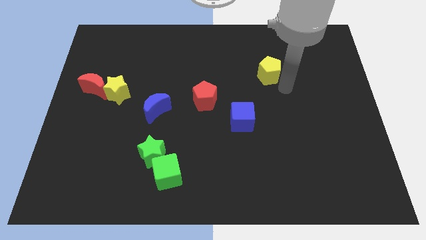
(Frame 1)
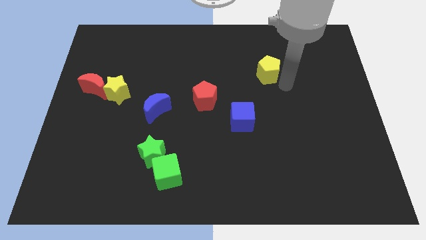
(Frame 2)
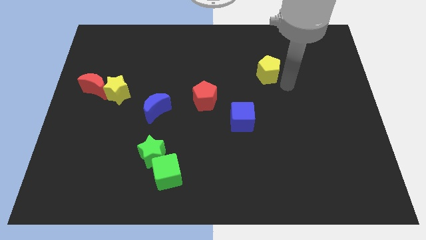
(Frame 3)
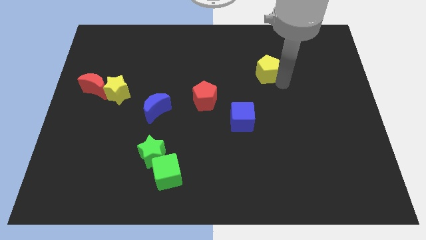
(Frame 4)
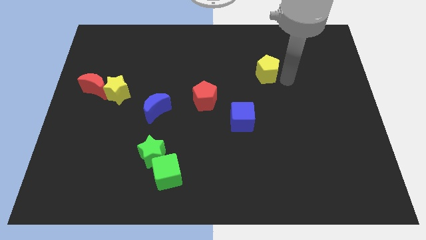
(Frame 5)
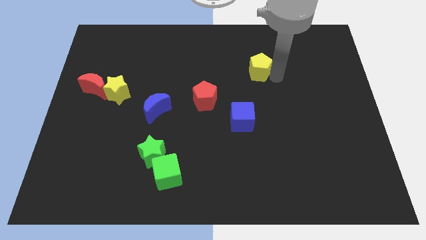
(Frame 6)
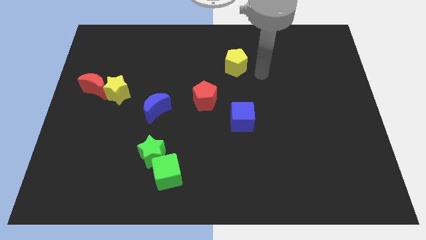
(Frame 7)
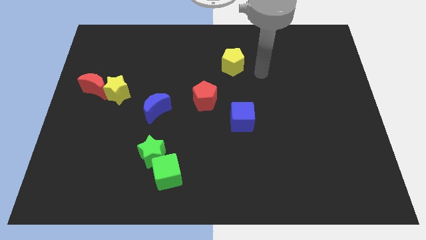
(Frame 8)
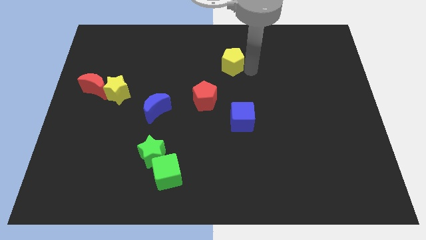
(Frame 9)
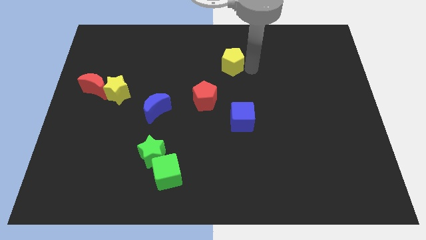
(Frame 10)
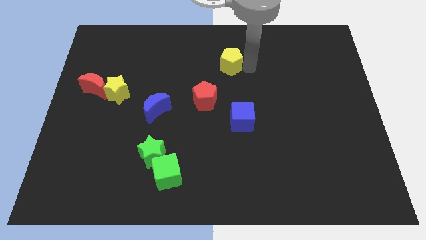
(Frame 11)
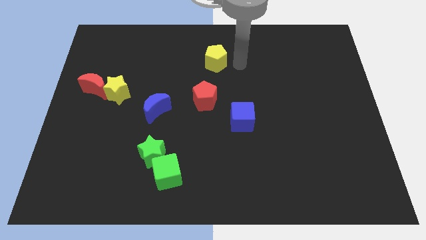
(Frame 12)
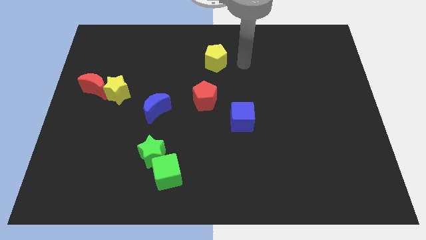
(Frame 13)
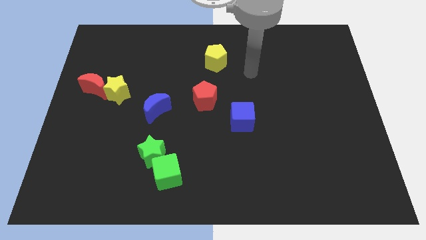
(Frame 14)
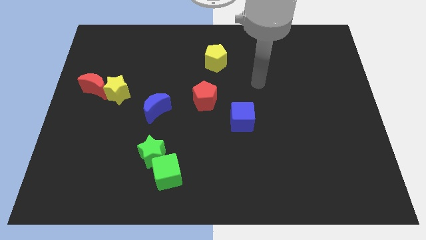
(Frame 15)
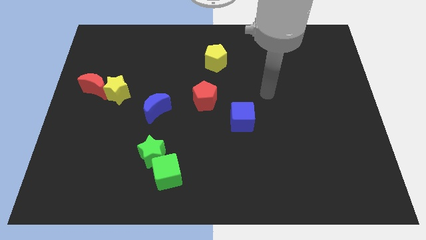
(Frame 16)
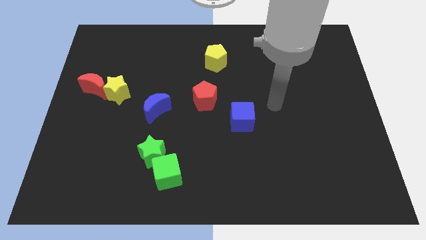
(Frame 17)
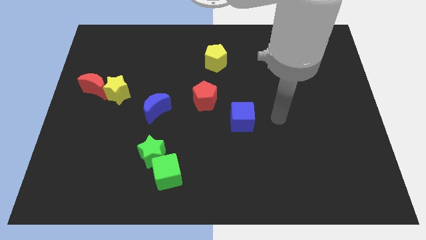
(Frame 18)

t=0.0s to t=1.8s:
put yellow pentagon to the top center of the board

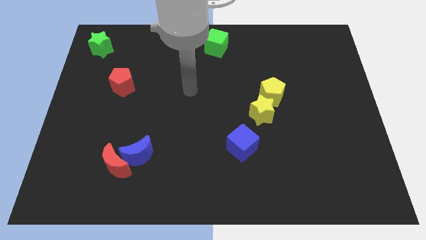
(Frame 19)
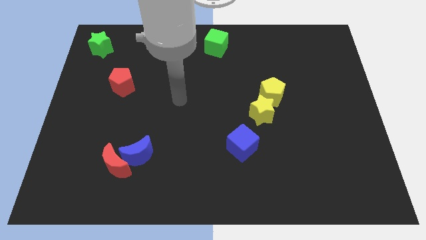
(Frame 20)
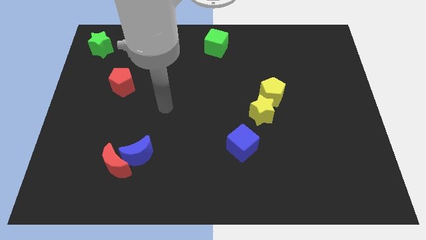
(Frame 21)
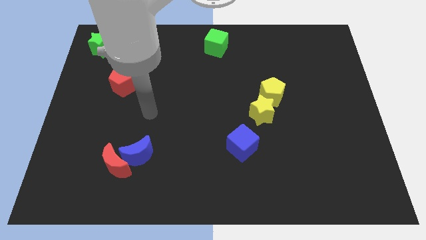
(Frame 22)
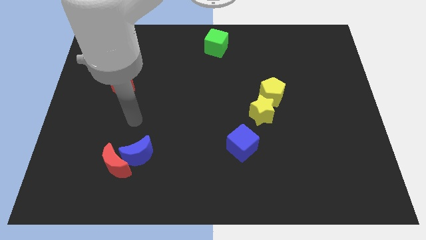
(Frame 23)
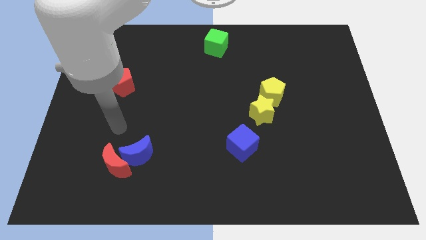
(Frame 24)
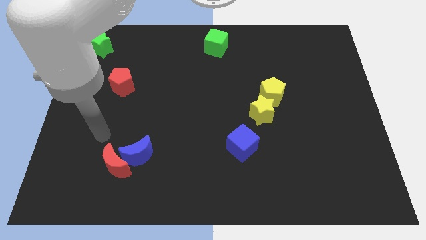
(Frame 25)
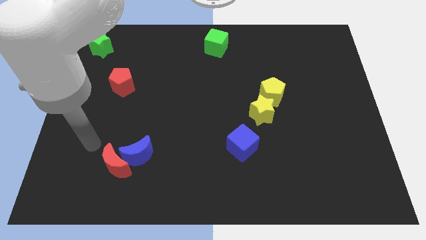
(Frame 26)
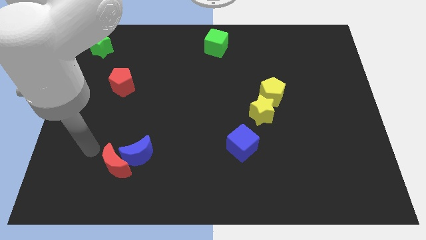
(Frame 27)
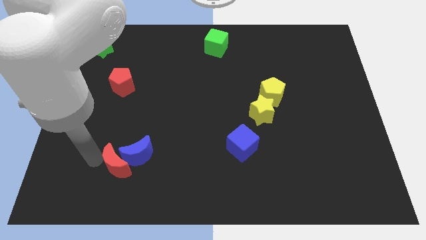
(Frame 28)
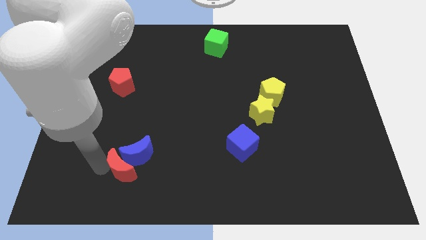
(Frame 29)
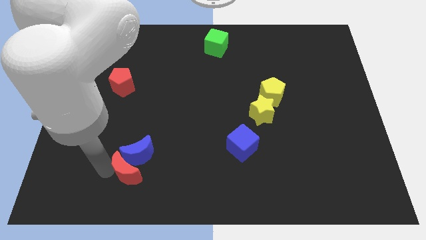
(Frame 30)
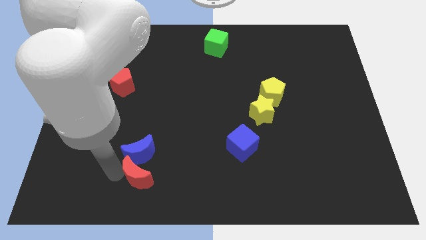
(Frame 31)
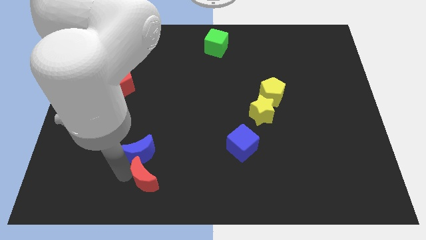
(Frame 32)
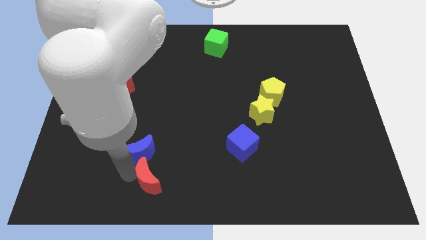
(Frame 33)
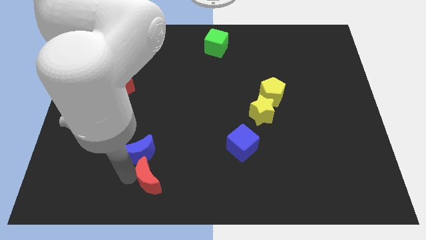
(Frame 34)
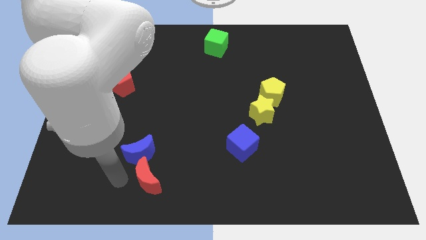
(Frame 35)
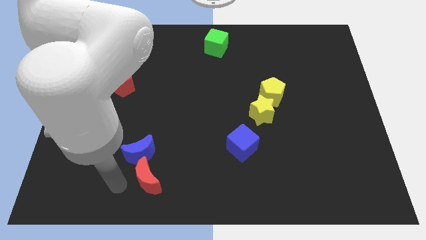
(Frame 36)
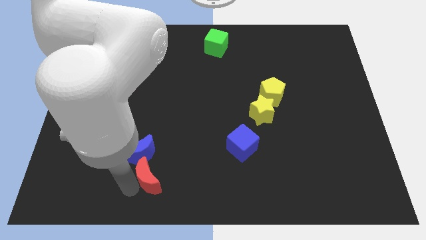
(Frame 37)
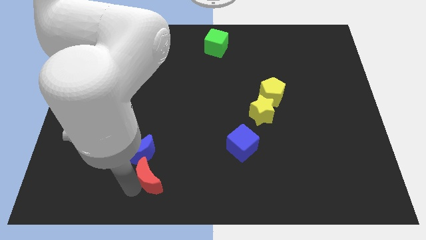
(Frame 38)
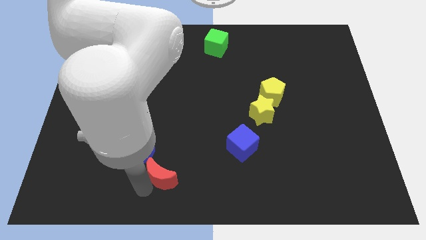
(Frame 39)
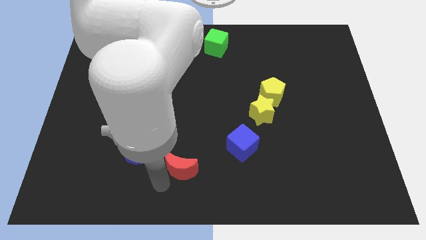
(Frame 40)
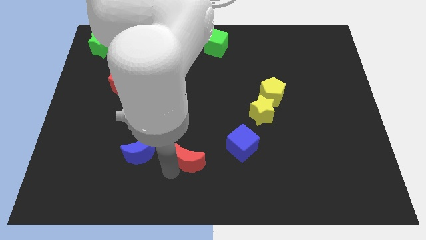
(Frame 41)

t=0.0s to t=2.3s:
separate the red moon from the blue moon

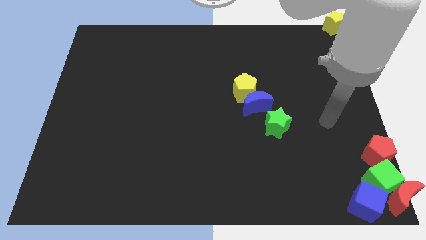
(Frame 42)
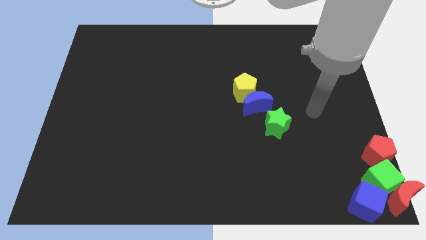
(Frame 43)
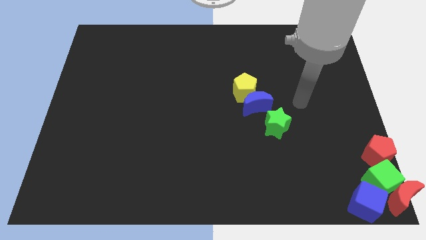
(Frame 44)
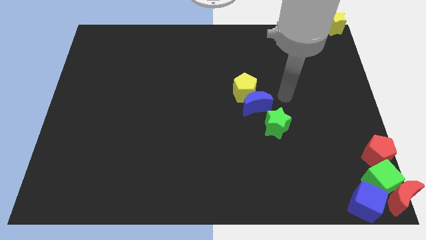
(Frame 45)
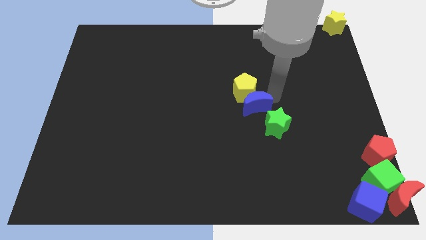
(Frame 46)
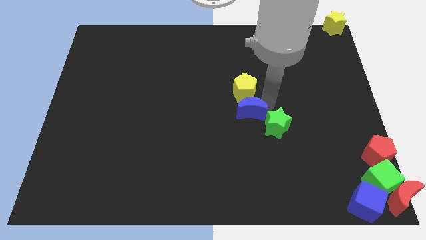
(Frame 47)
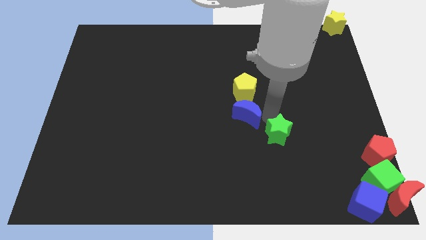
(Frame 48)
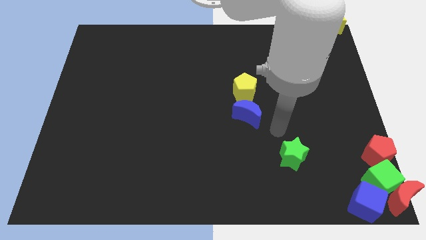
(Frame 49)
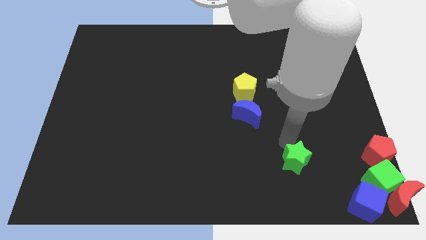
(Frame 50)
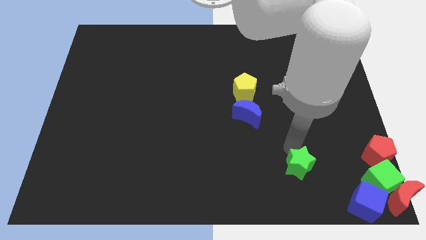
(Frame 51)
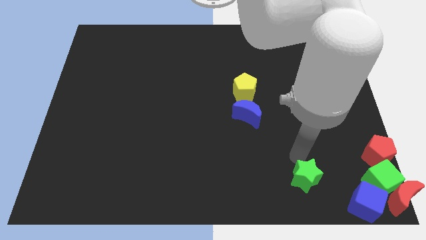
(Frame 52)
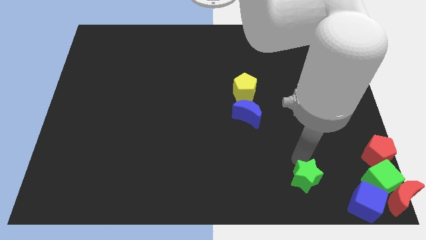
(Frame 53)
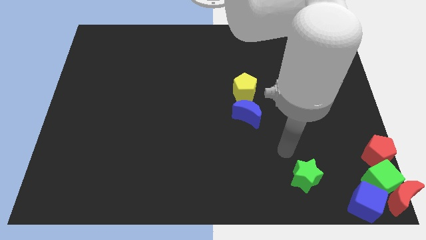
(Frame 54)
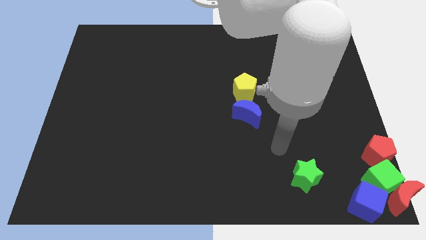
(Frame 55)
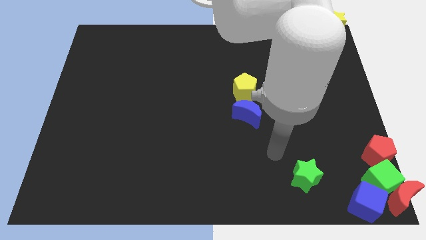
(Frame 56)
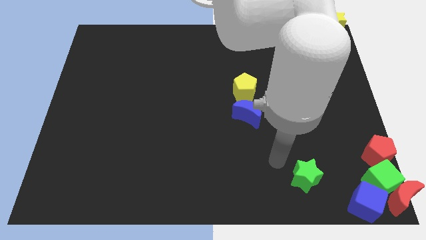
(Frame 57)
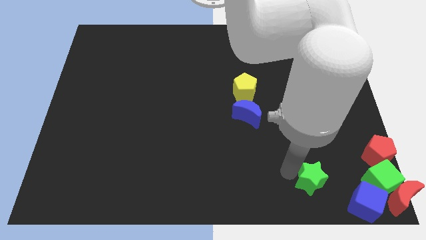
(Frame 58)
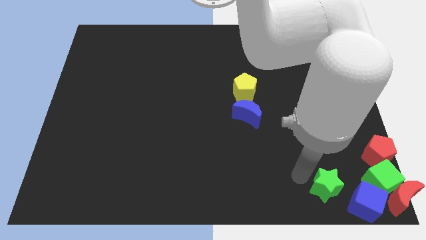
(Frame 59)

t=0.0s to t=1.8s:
separate the green star and the blue moon

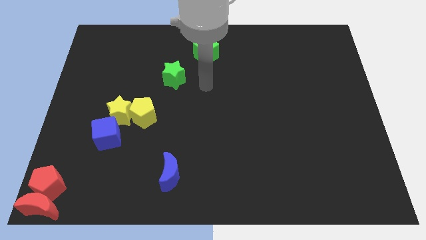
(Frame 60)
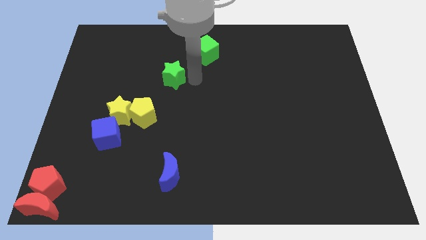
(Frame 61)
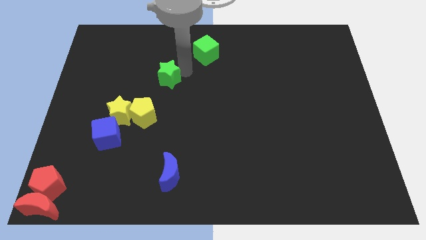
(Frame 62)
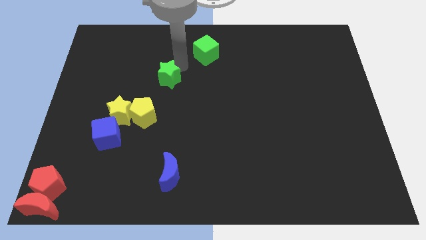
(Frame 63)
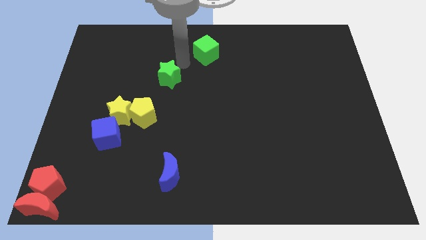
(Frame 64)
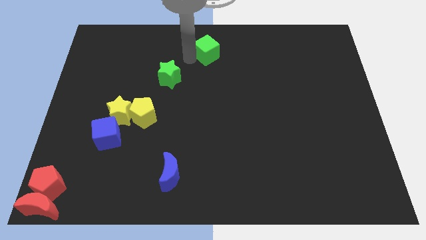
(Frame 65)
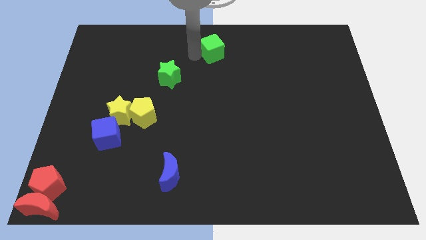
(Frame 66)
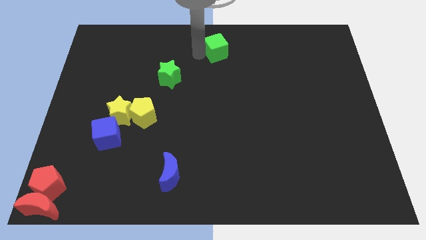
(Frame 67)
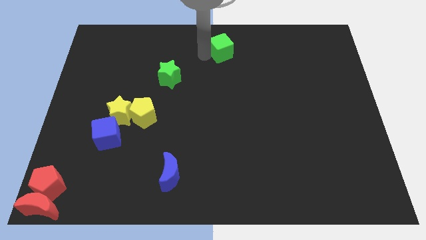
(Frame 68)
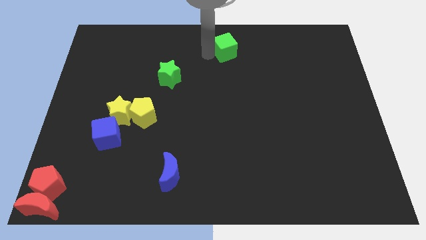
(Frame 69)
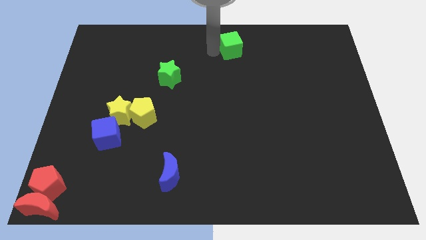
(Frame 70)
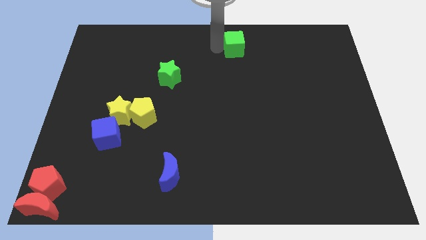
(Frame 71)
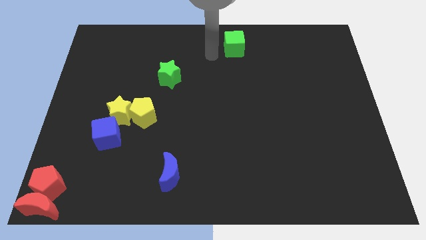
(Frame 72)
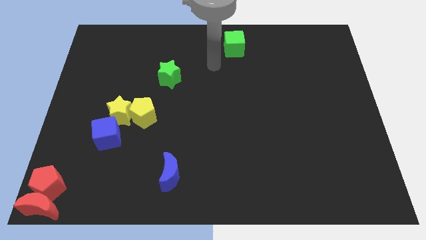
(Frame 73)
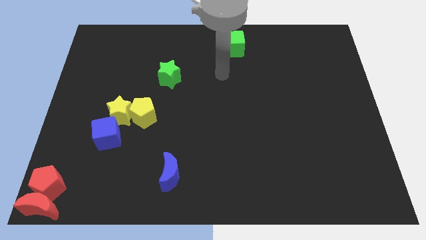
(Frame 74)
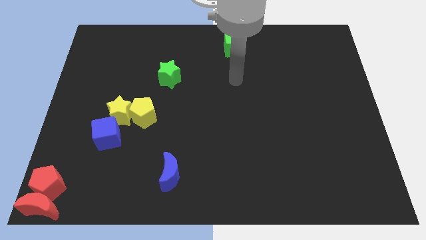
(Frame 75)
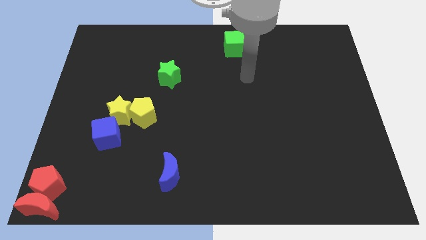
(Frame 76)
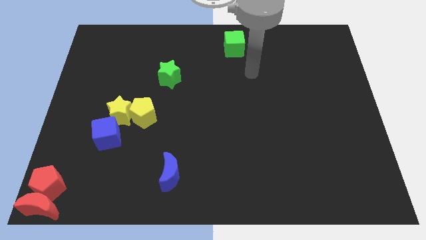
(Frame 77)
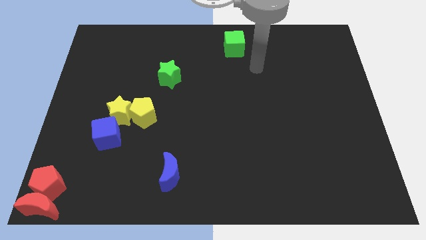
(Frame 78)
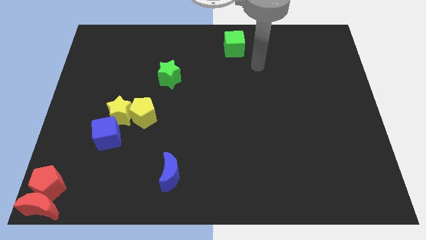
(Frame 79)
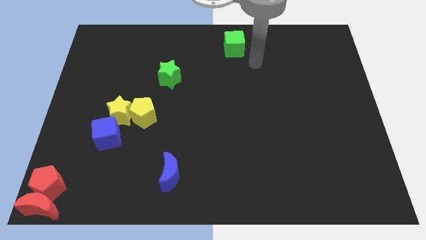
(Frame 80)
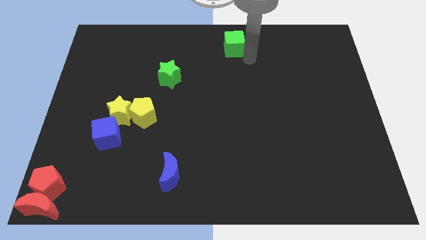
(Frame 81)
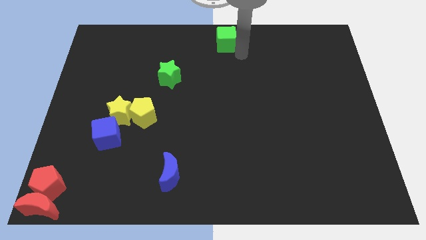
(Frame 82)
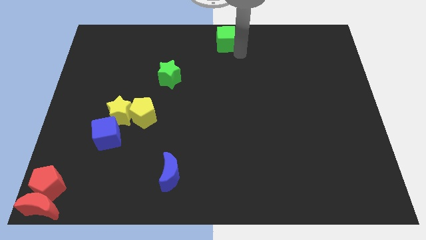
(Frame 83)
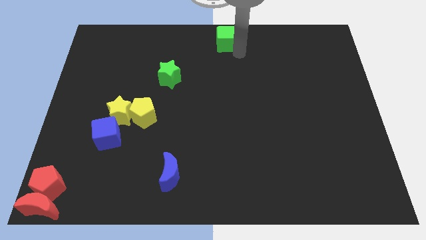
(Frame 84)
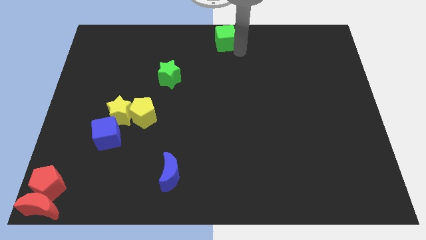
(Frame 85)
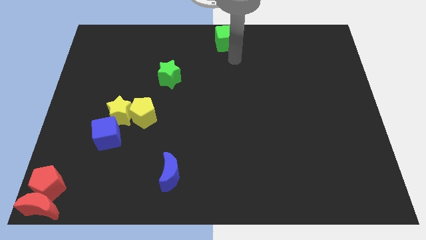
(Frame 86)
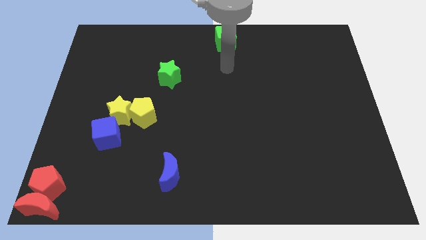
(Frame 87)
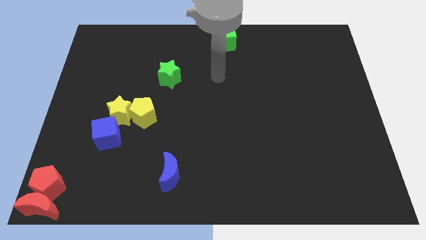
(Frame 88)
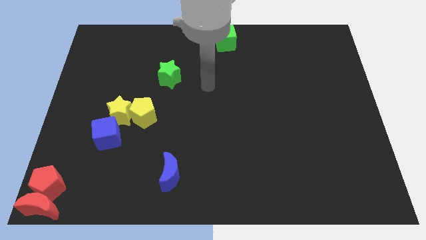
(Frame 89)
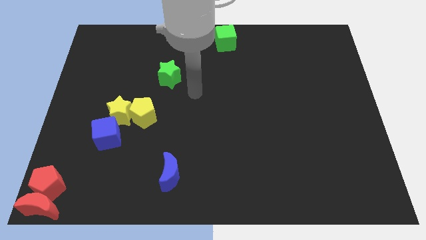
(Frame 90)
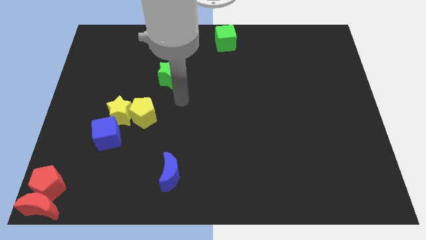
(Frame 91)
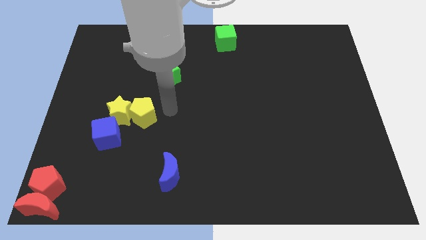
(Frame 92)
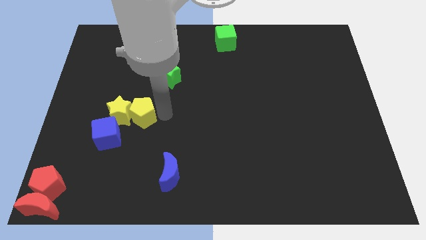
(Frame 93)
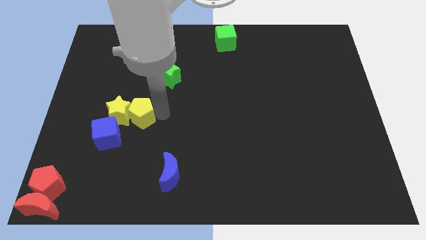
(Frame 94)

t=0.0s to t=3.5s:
move the green cube to the top middle
